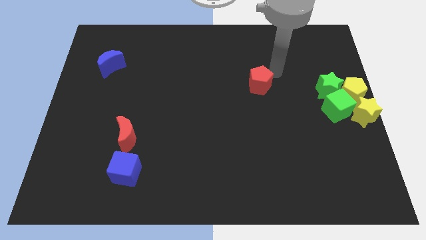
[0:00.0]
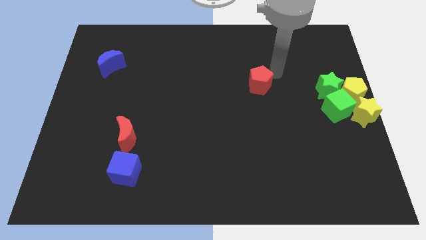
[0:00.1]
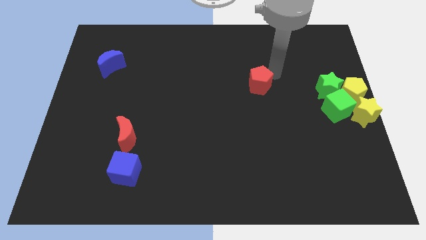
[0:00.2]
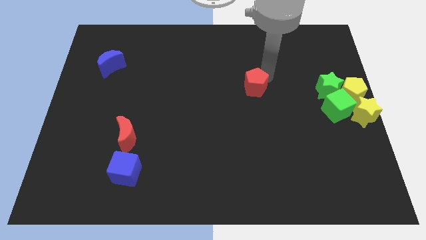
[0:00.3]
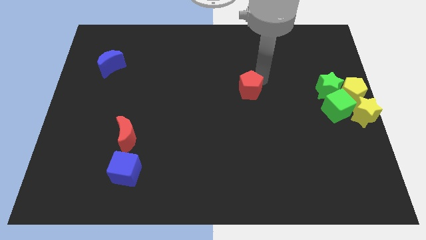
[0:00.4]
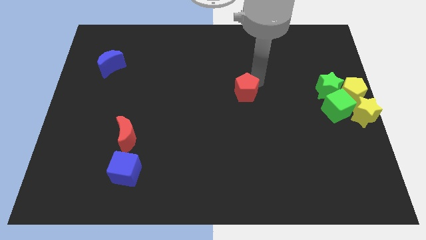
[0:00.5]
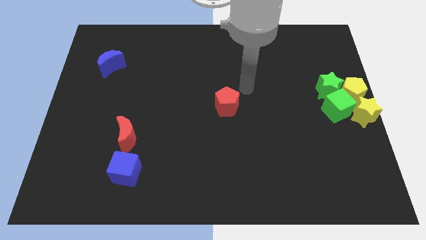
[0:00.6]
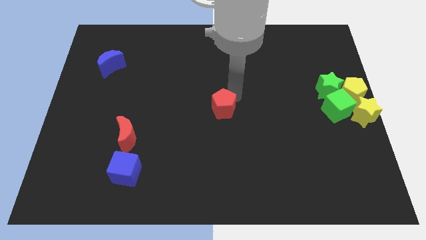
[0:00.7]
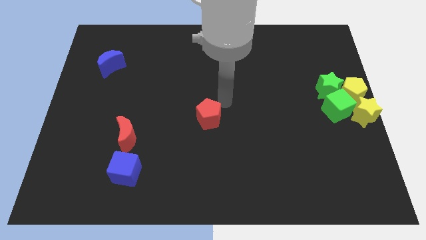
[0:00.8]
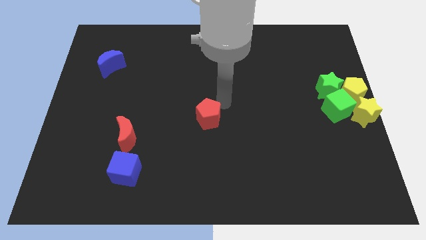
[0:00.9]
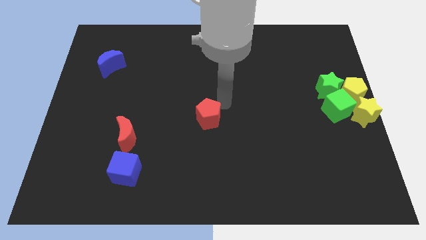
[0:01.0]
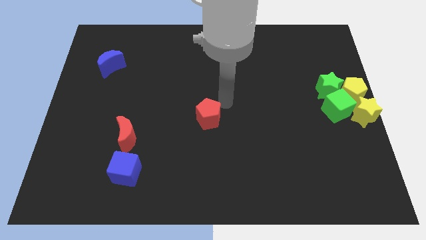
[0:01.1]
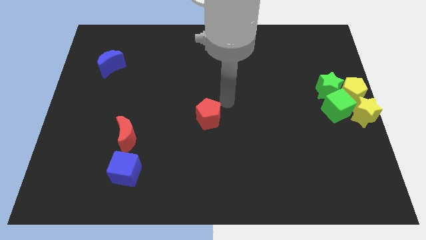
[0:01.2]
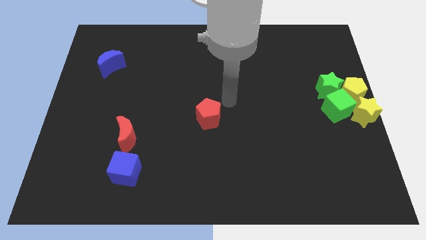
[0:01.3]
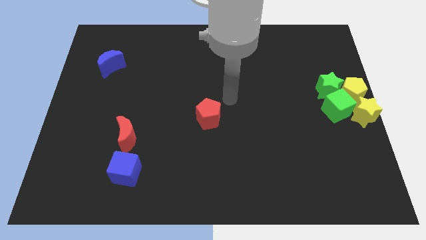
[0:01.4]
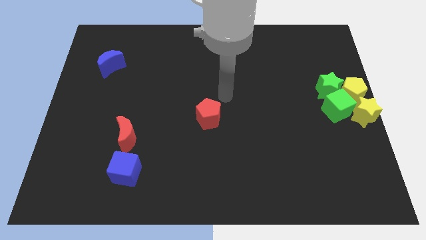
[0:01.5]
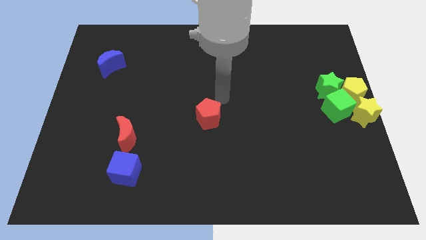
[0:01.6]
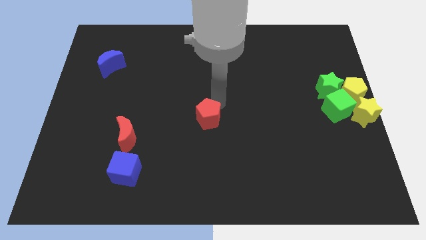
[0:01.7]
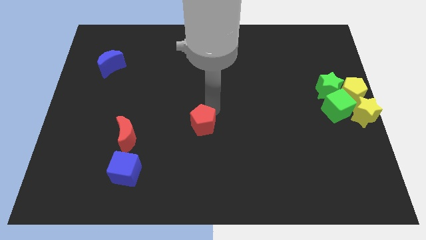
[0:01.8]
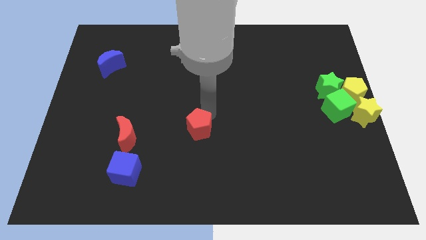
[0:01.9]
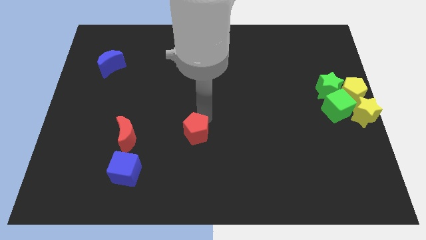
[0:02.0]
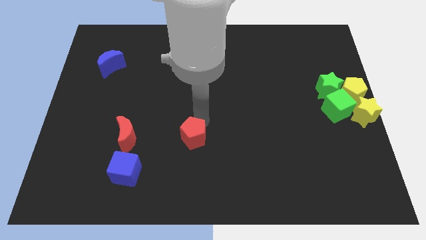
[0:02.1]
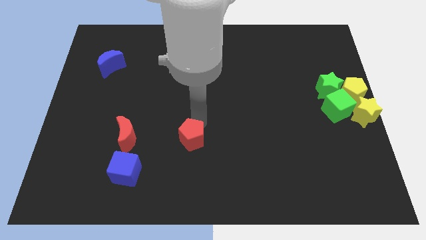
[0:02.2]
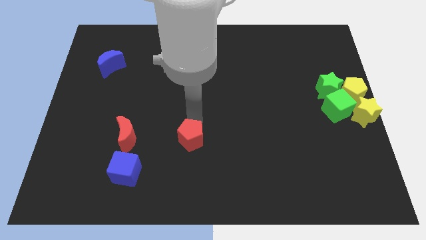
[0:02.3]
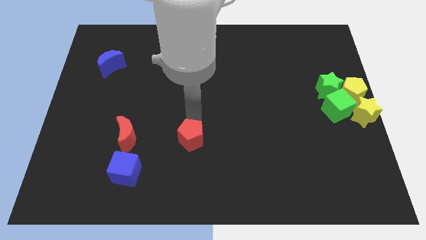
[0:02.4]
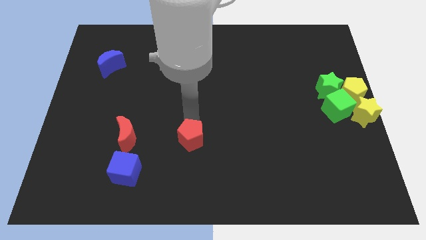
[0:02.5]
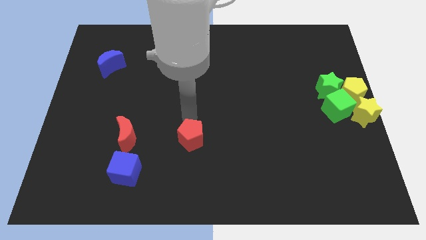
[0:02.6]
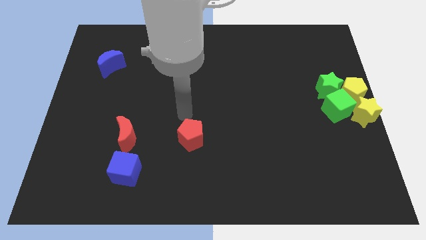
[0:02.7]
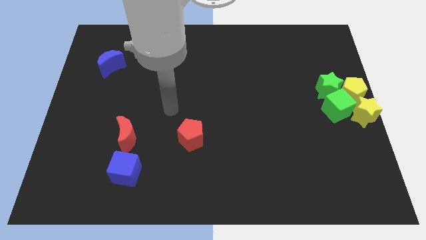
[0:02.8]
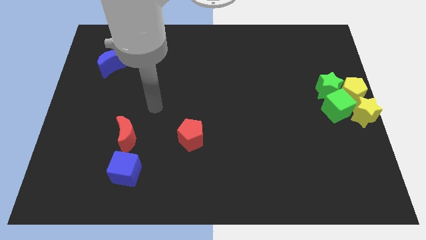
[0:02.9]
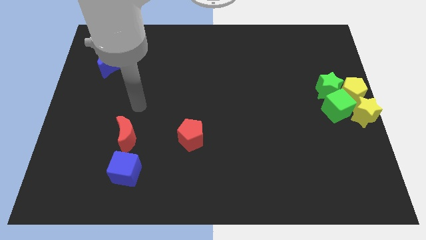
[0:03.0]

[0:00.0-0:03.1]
place the red pentagon diagonally top right to the blue cube

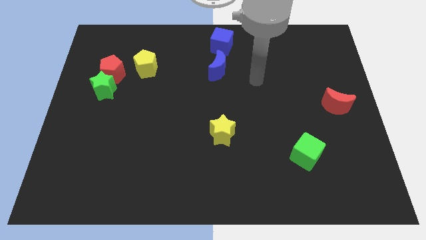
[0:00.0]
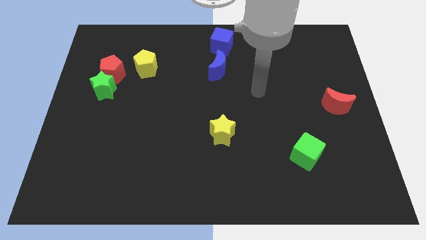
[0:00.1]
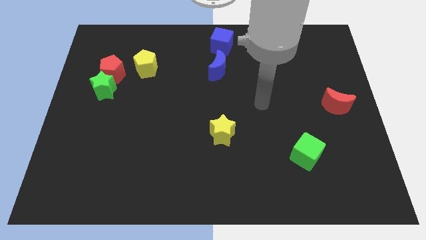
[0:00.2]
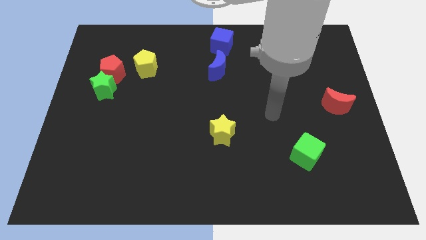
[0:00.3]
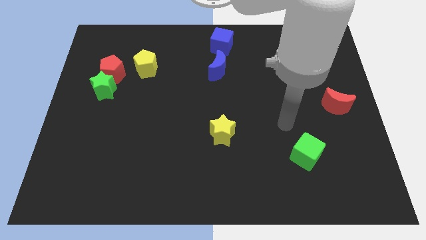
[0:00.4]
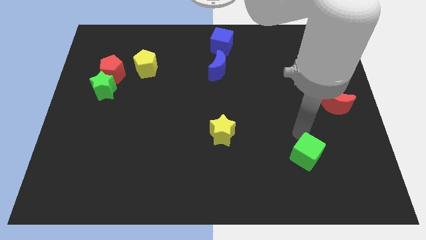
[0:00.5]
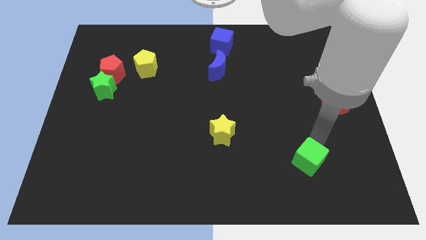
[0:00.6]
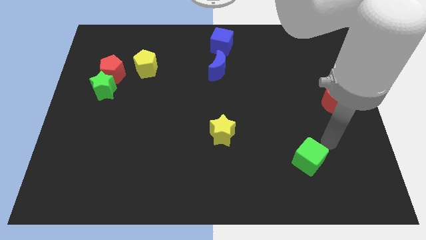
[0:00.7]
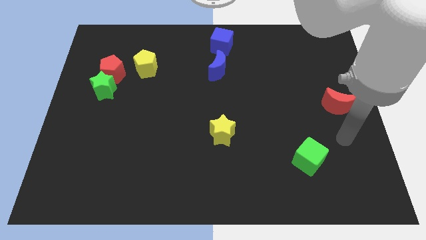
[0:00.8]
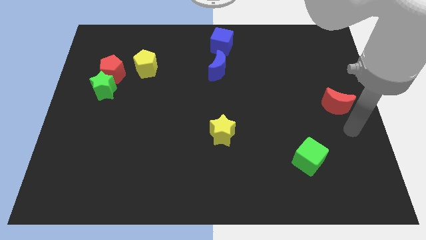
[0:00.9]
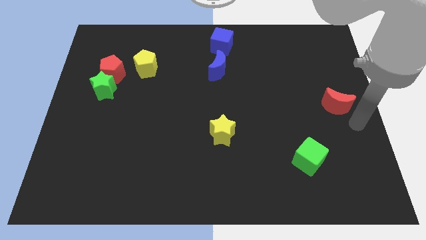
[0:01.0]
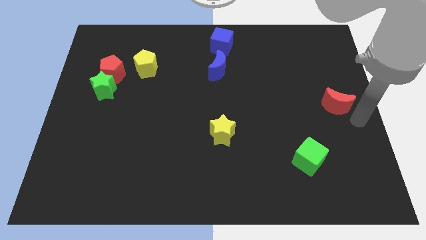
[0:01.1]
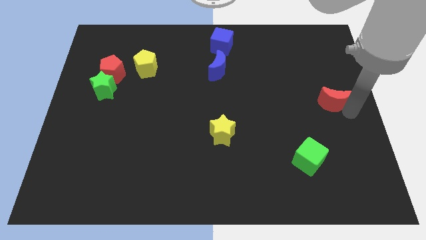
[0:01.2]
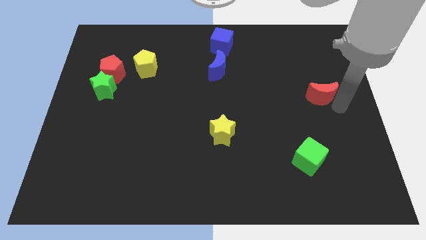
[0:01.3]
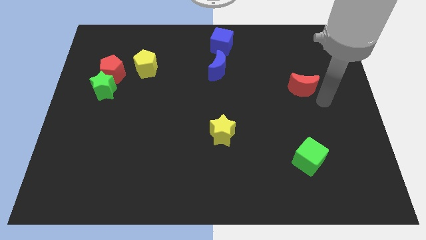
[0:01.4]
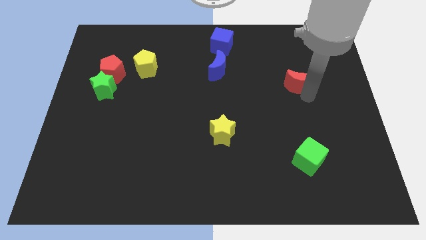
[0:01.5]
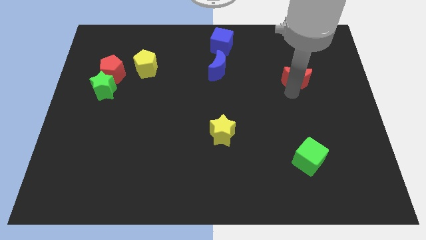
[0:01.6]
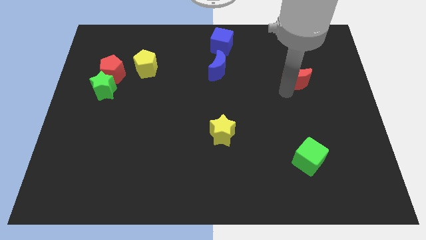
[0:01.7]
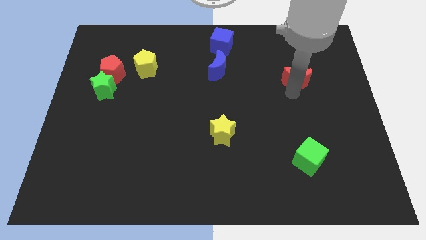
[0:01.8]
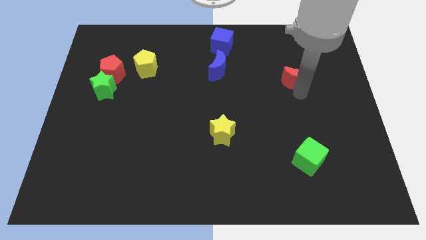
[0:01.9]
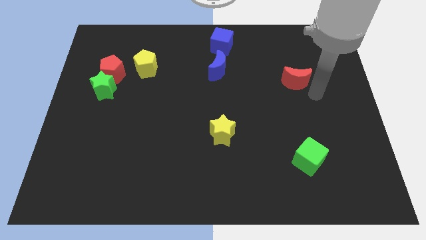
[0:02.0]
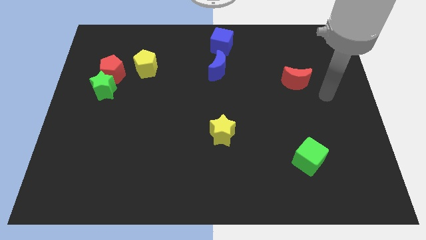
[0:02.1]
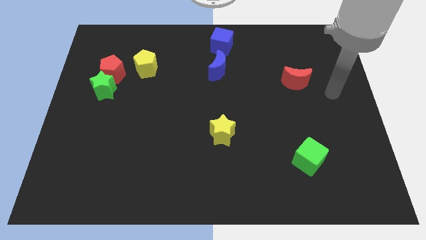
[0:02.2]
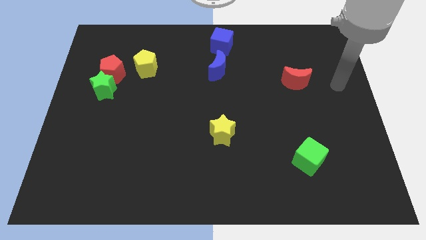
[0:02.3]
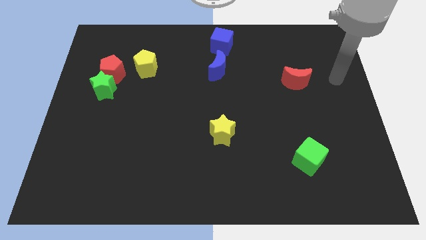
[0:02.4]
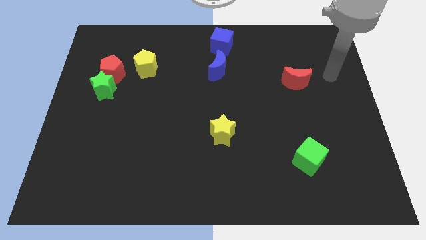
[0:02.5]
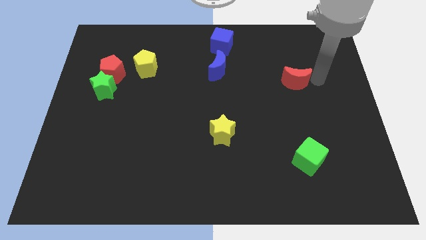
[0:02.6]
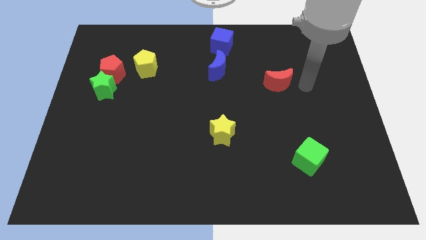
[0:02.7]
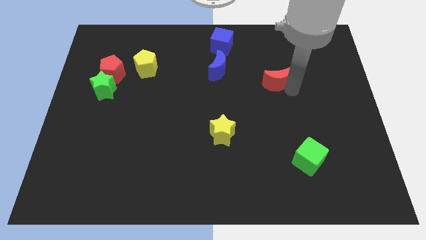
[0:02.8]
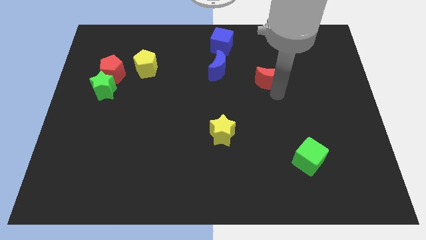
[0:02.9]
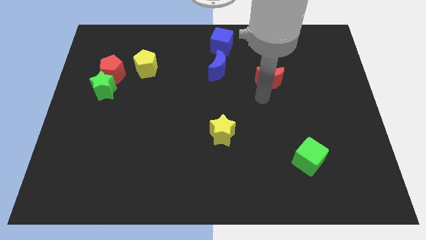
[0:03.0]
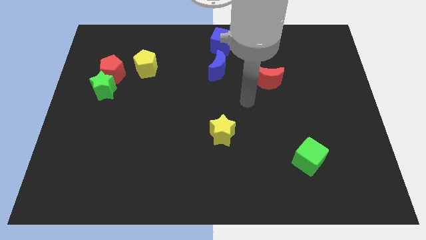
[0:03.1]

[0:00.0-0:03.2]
push the red moon to the right of the blue moon

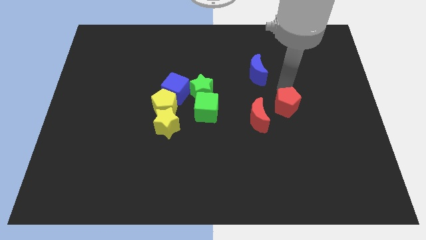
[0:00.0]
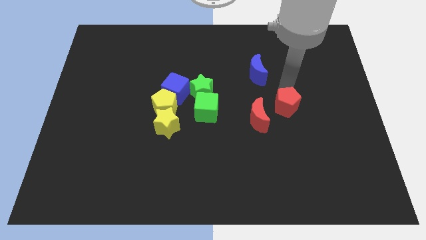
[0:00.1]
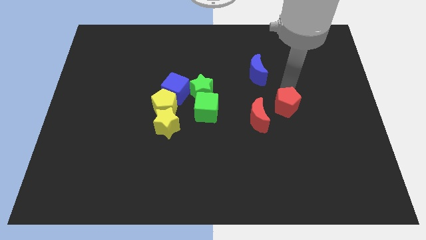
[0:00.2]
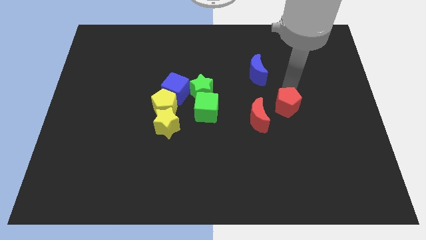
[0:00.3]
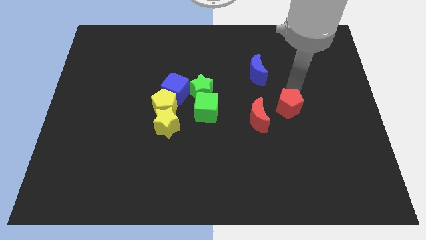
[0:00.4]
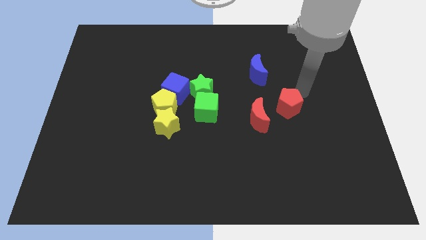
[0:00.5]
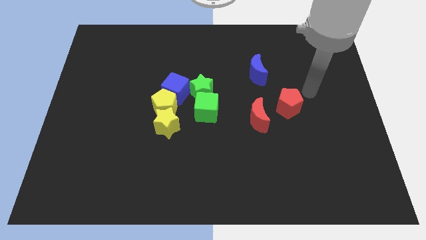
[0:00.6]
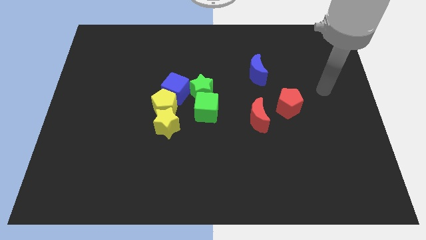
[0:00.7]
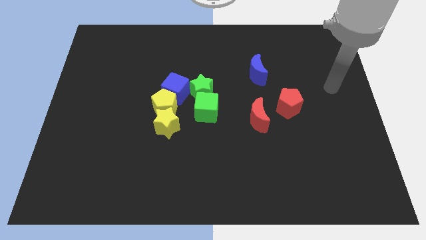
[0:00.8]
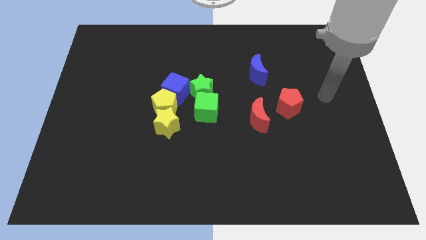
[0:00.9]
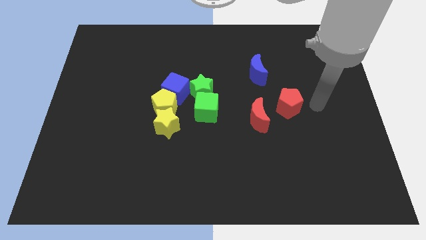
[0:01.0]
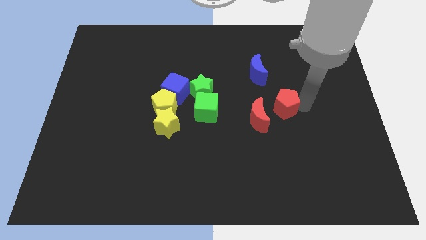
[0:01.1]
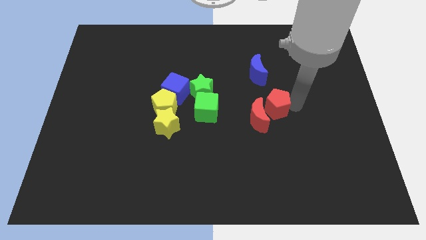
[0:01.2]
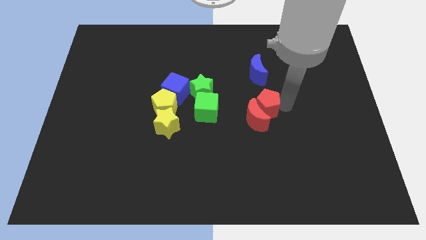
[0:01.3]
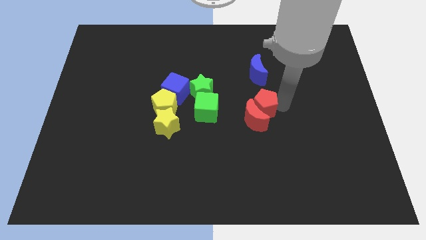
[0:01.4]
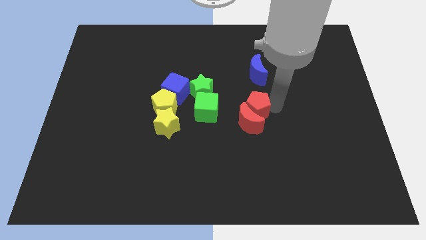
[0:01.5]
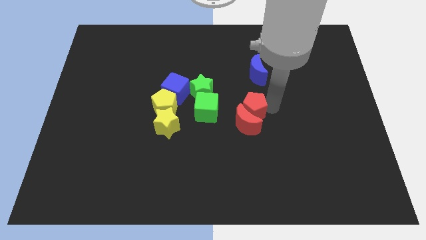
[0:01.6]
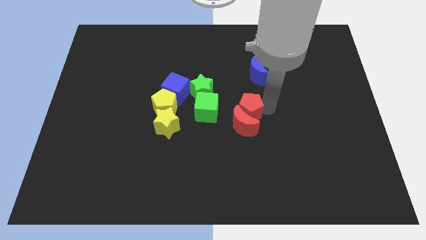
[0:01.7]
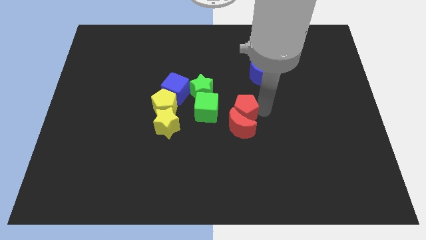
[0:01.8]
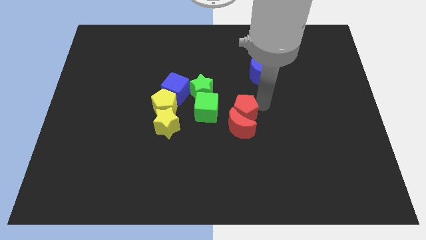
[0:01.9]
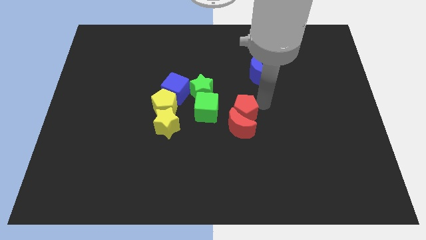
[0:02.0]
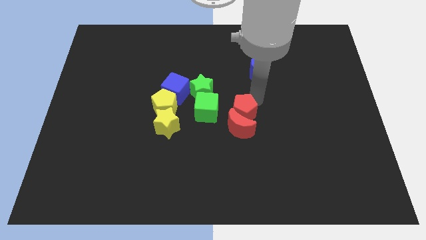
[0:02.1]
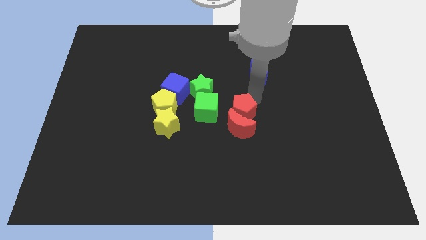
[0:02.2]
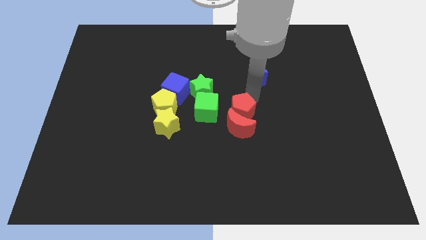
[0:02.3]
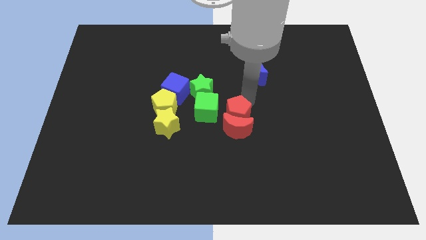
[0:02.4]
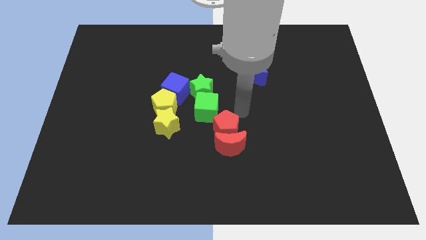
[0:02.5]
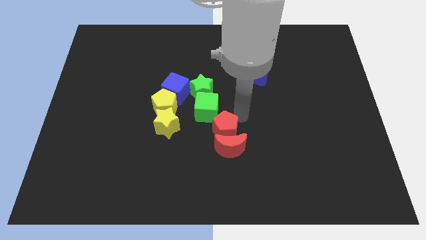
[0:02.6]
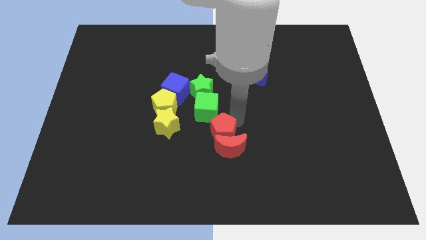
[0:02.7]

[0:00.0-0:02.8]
place the red pentagon to the top side of the red moon
